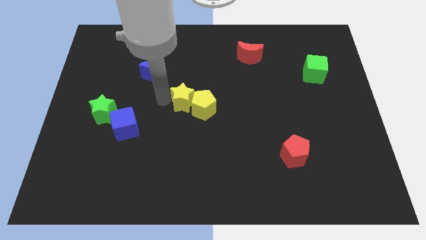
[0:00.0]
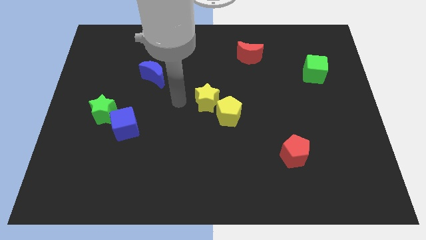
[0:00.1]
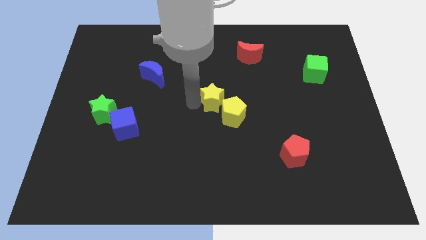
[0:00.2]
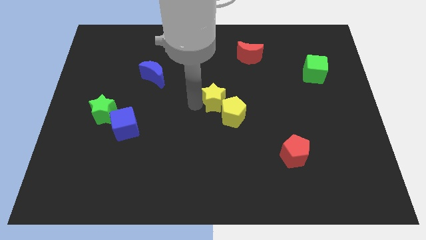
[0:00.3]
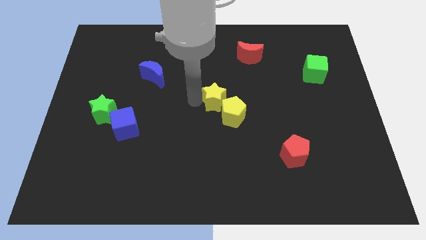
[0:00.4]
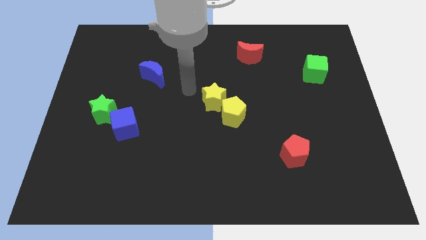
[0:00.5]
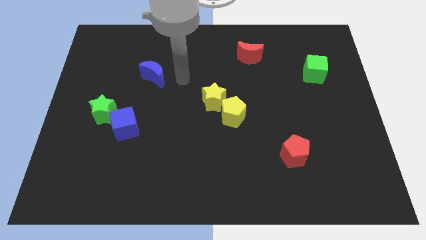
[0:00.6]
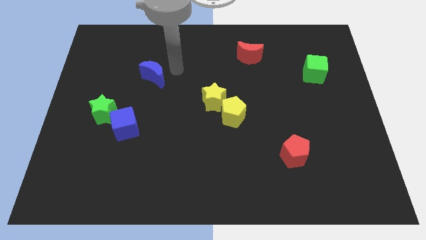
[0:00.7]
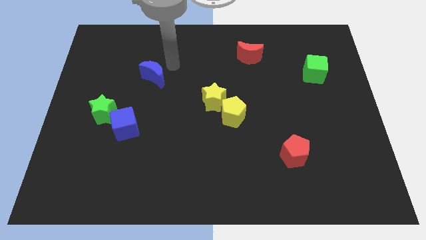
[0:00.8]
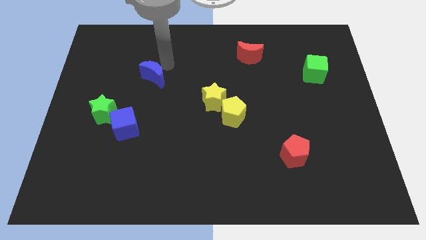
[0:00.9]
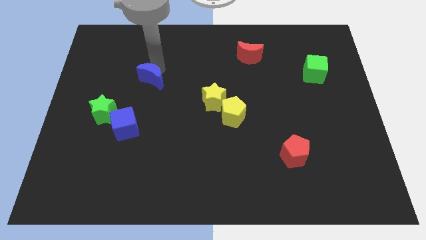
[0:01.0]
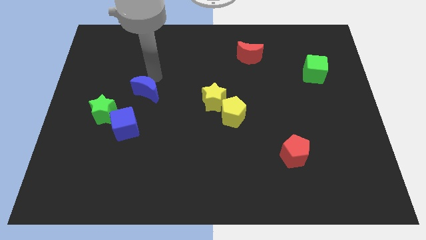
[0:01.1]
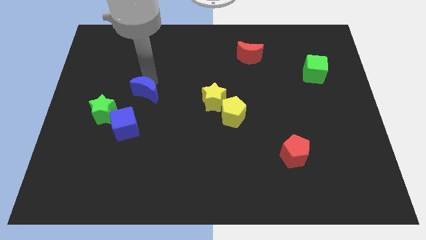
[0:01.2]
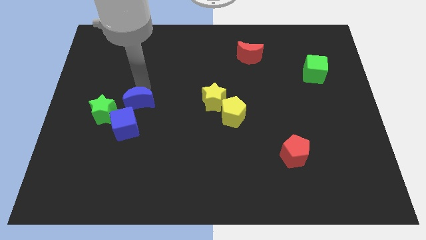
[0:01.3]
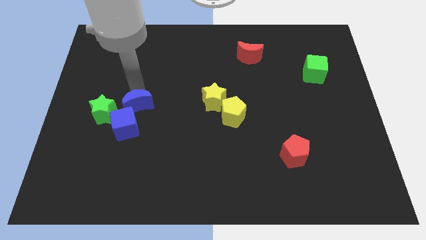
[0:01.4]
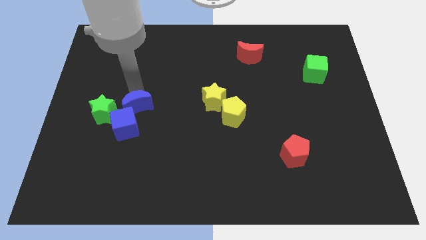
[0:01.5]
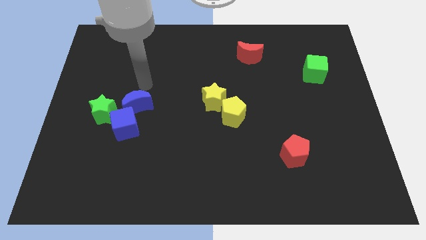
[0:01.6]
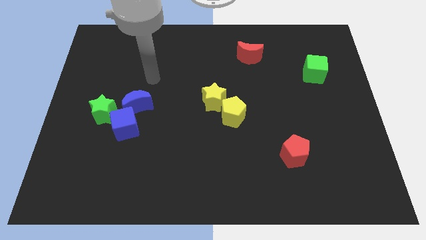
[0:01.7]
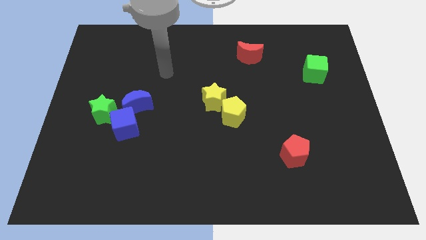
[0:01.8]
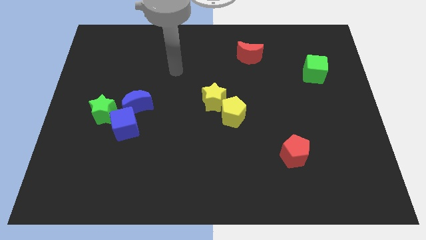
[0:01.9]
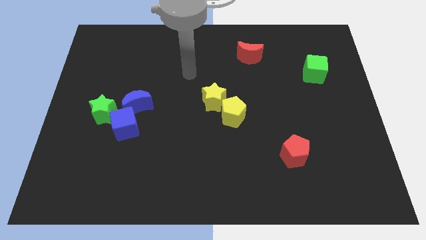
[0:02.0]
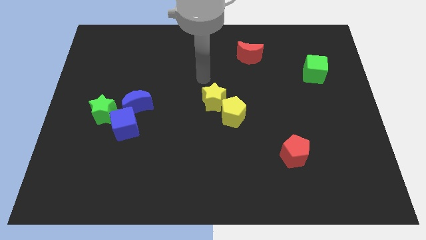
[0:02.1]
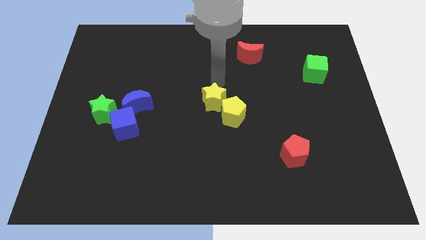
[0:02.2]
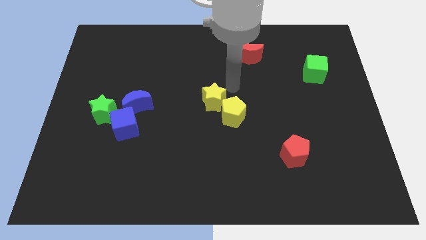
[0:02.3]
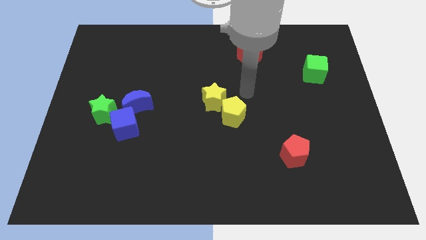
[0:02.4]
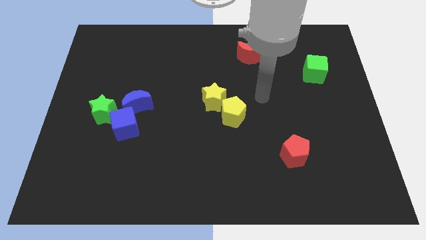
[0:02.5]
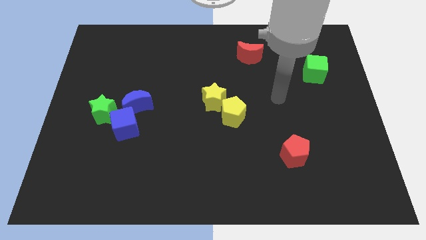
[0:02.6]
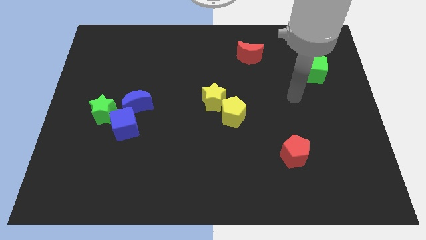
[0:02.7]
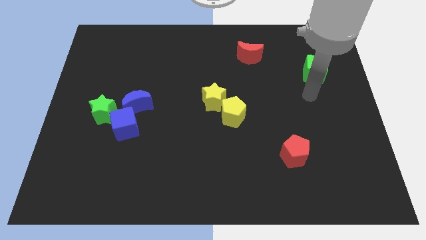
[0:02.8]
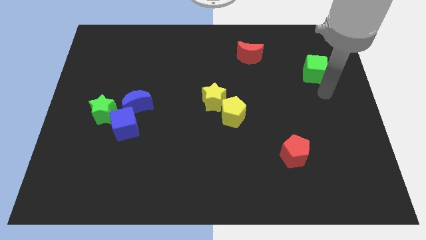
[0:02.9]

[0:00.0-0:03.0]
place the blue moon above the blue cube

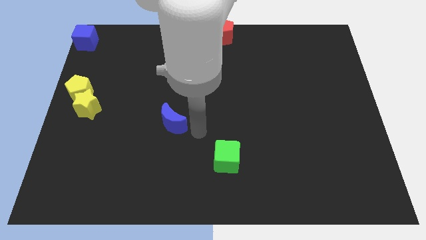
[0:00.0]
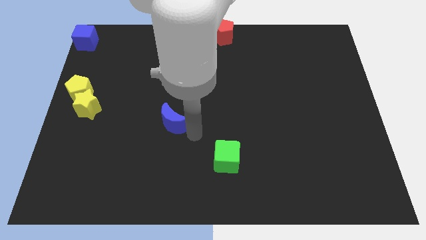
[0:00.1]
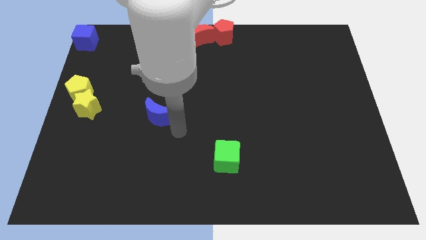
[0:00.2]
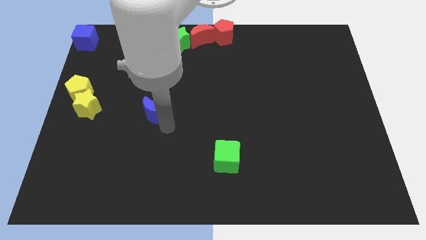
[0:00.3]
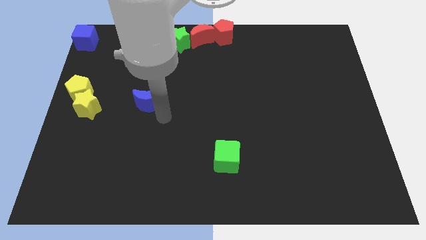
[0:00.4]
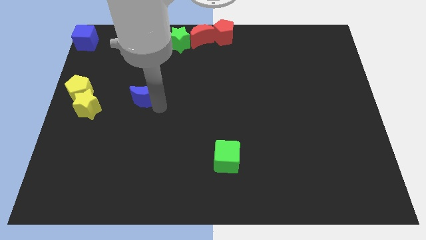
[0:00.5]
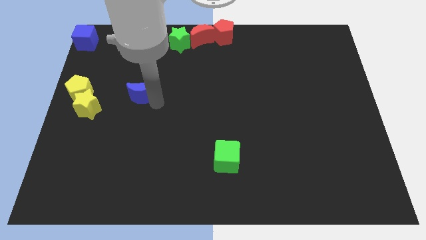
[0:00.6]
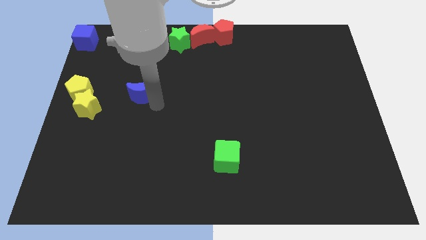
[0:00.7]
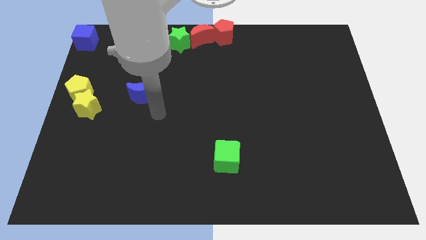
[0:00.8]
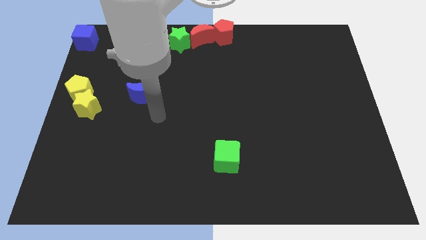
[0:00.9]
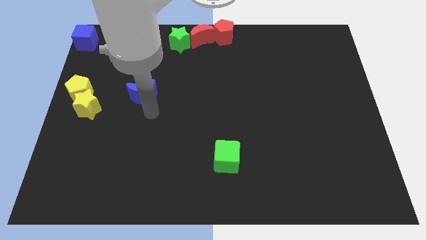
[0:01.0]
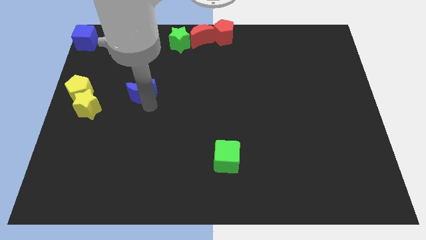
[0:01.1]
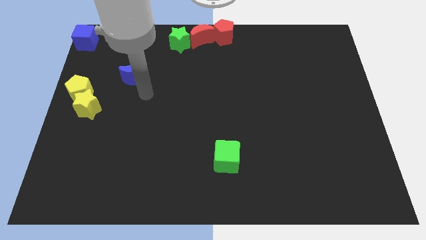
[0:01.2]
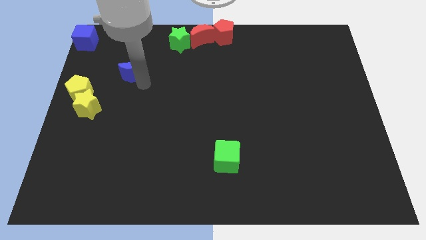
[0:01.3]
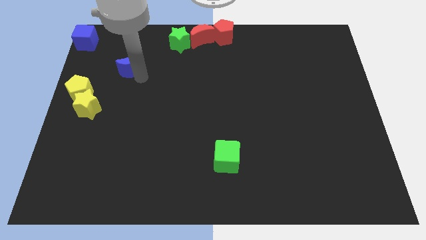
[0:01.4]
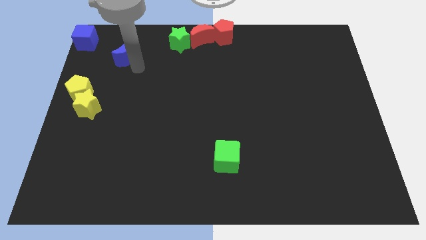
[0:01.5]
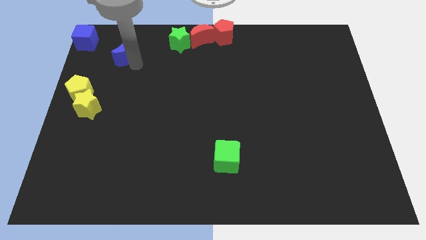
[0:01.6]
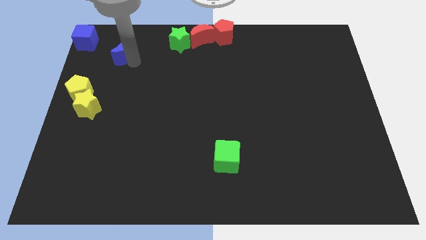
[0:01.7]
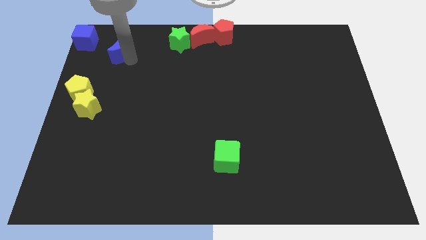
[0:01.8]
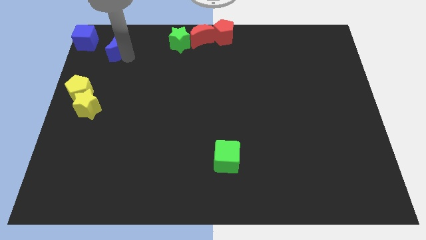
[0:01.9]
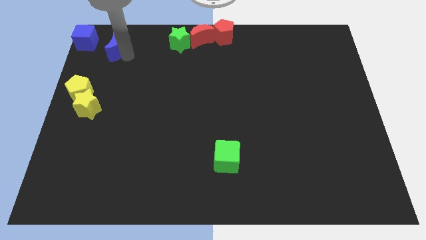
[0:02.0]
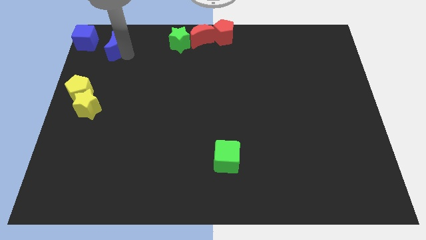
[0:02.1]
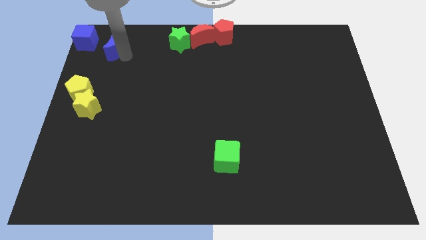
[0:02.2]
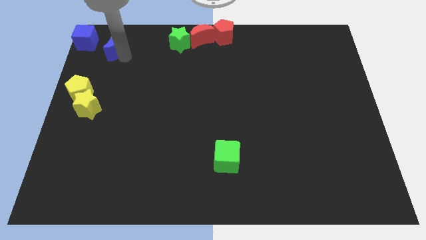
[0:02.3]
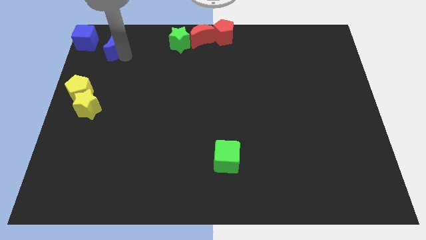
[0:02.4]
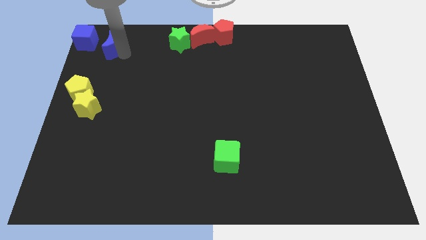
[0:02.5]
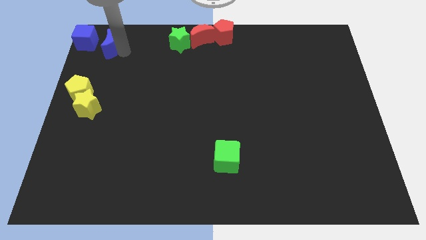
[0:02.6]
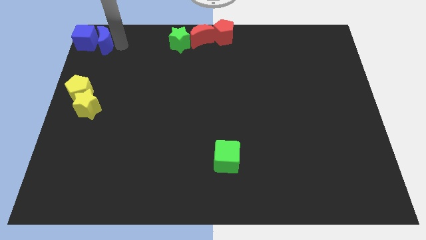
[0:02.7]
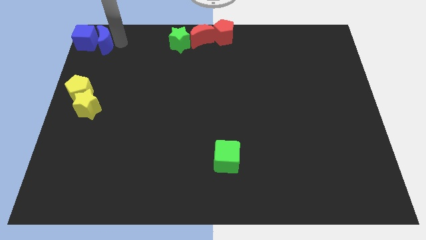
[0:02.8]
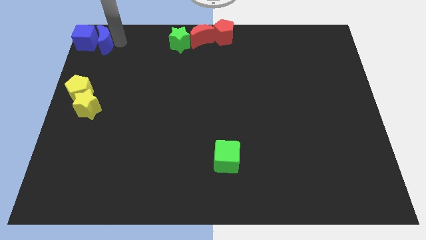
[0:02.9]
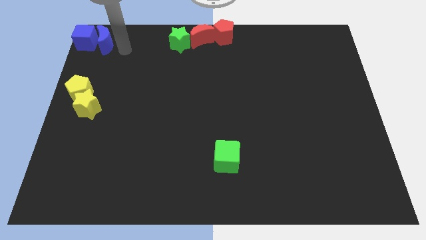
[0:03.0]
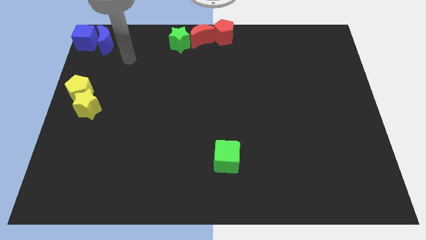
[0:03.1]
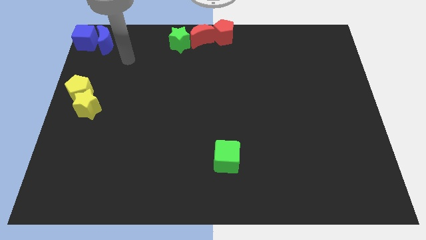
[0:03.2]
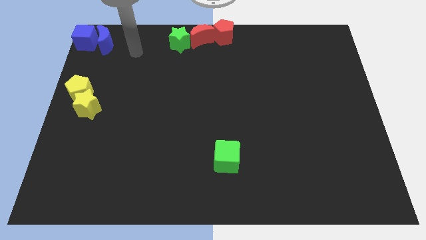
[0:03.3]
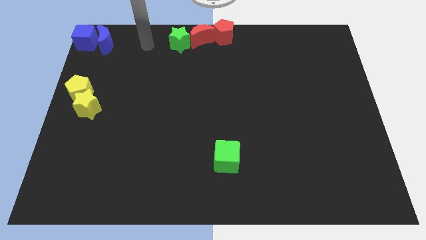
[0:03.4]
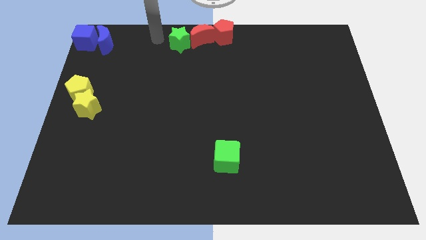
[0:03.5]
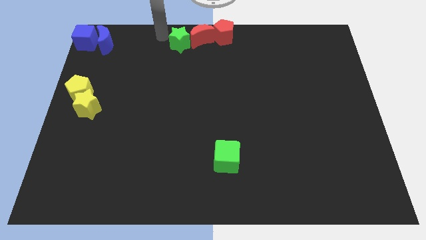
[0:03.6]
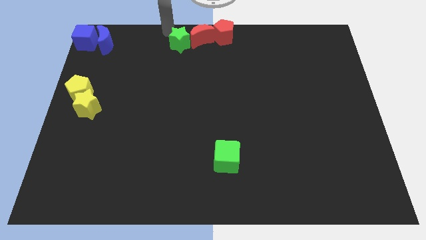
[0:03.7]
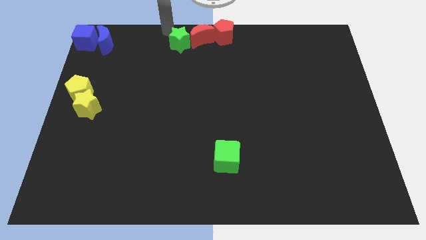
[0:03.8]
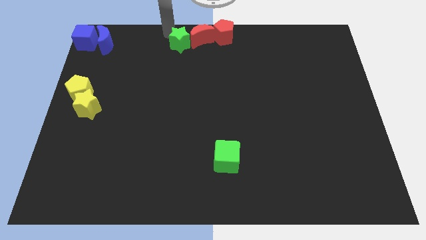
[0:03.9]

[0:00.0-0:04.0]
move the blue moon to the right of the blue cube

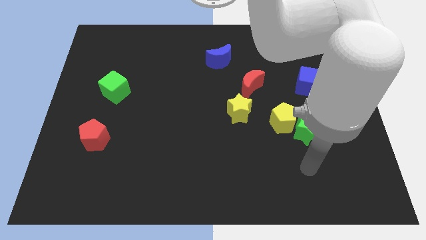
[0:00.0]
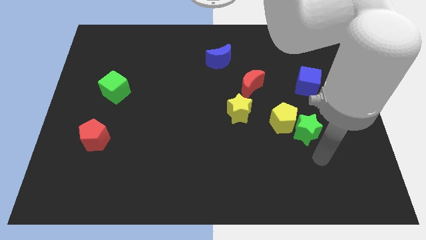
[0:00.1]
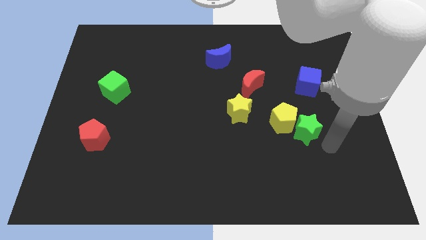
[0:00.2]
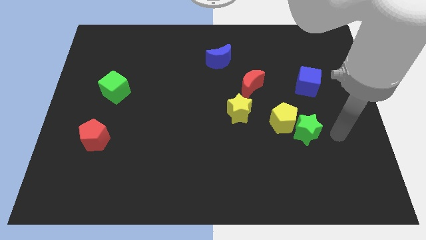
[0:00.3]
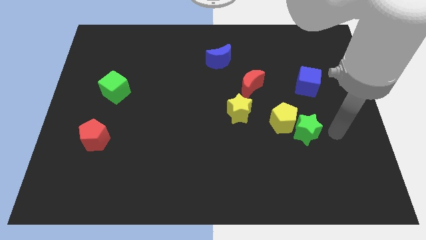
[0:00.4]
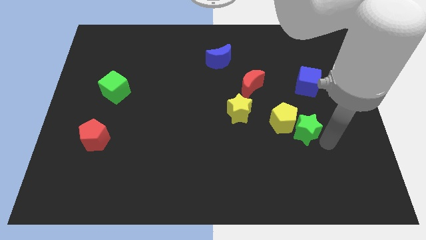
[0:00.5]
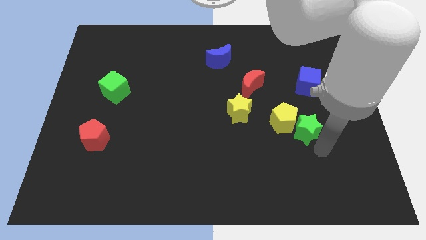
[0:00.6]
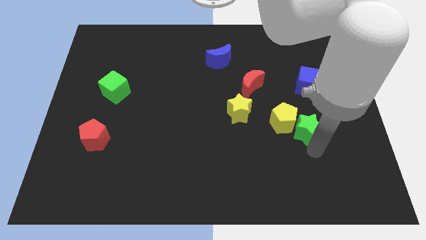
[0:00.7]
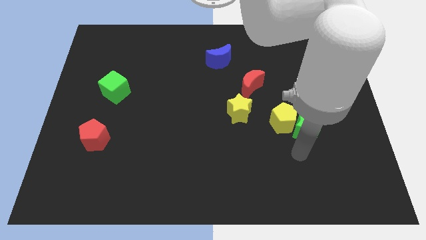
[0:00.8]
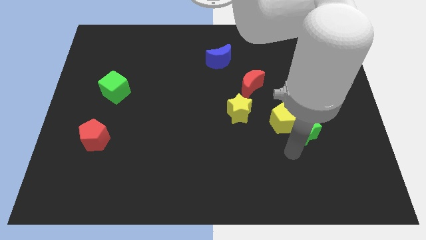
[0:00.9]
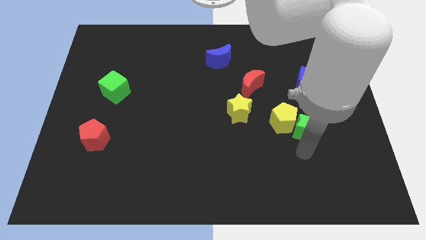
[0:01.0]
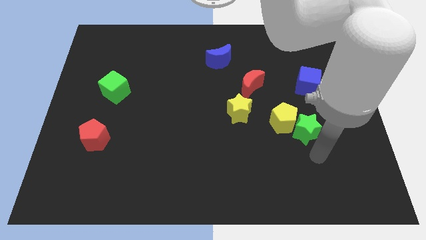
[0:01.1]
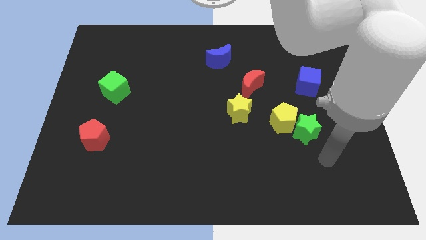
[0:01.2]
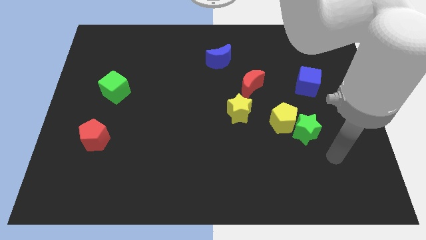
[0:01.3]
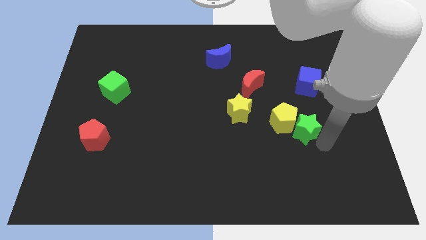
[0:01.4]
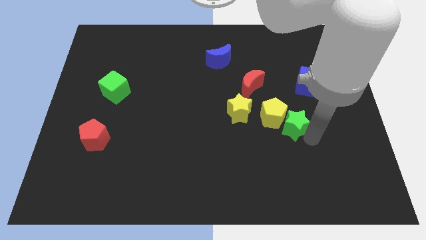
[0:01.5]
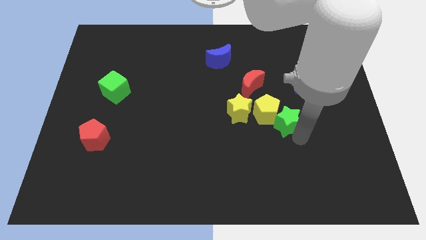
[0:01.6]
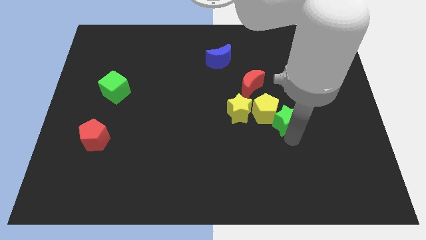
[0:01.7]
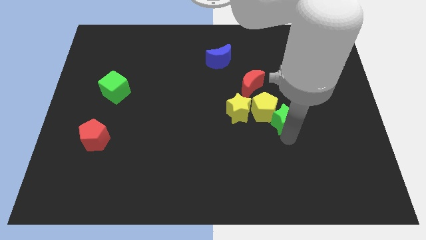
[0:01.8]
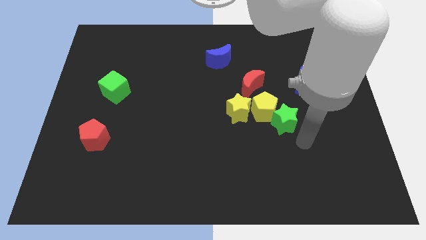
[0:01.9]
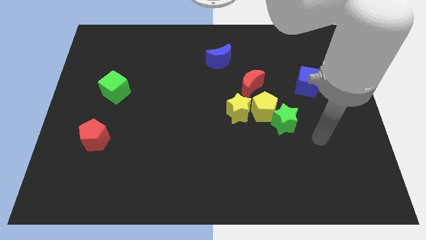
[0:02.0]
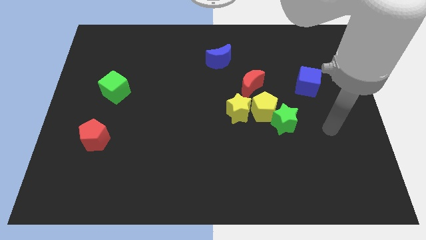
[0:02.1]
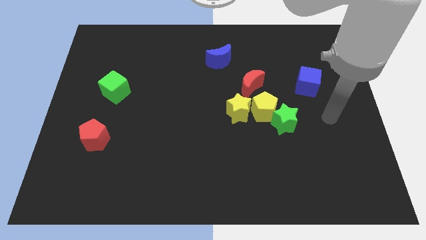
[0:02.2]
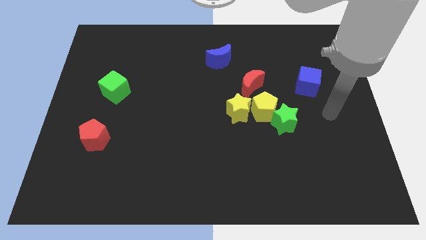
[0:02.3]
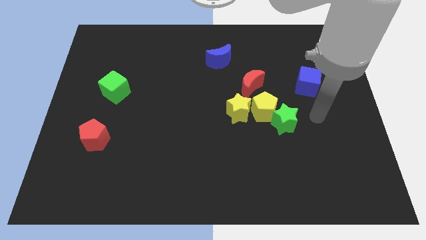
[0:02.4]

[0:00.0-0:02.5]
push the yellow pentagon and green star into the yellow star
